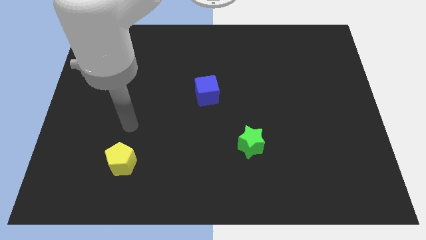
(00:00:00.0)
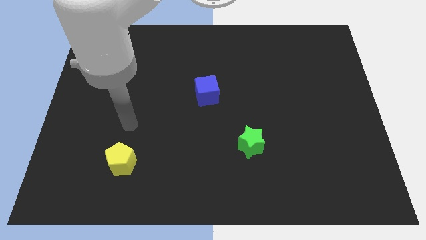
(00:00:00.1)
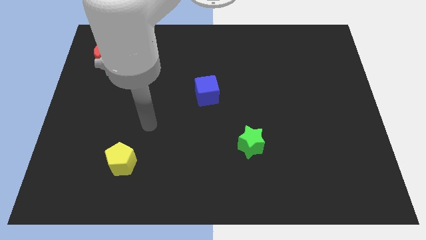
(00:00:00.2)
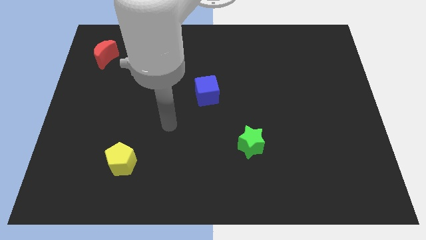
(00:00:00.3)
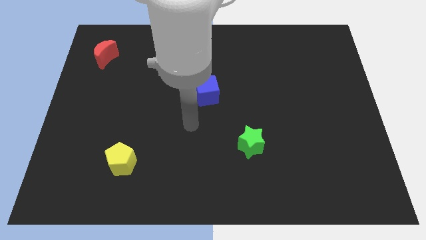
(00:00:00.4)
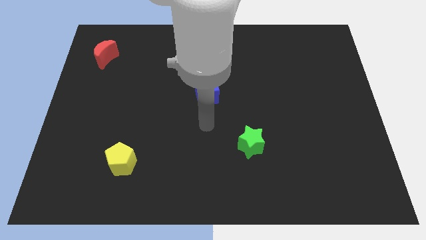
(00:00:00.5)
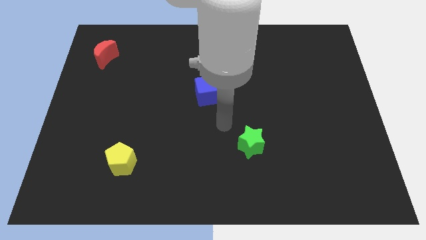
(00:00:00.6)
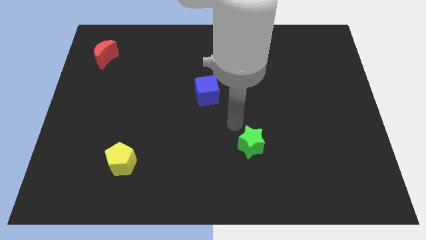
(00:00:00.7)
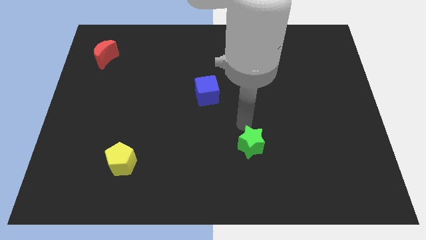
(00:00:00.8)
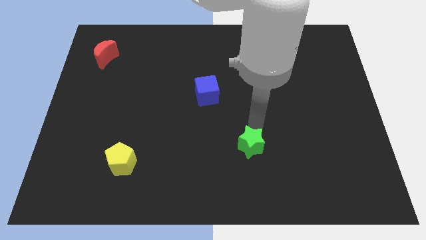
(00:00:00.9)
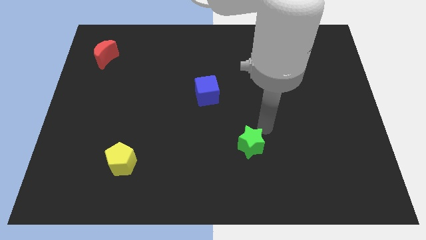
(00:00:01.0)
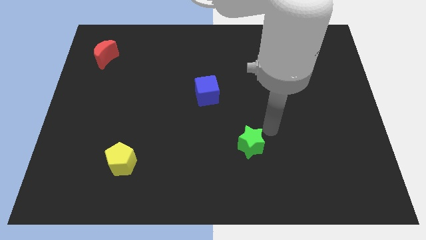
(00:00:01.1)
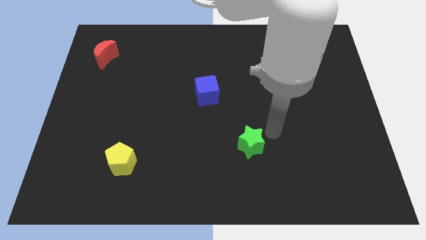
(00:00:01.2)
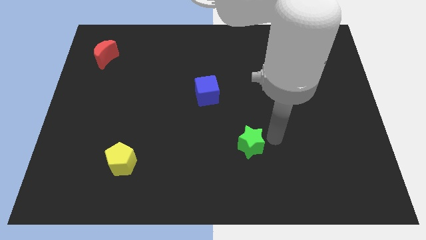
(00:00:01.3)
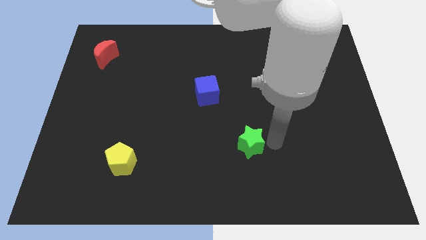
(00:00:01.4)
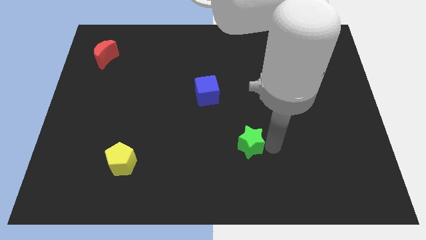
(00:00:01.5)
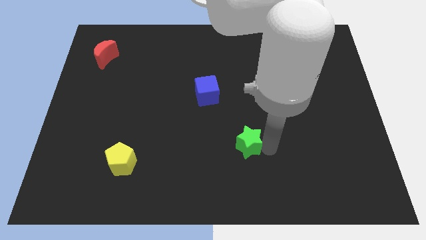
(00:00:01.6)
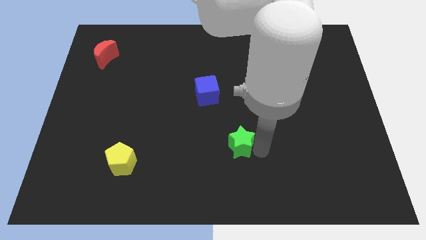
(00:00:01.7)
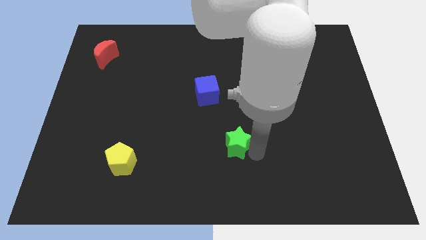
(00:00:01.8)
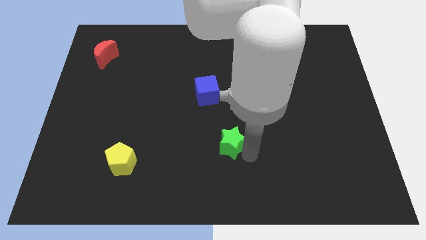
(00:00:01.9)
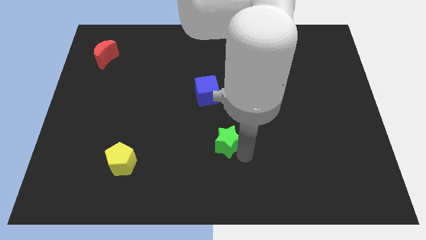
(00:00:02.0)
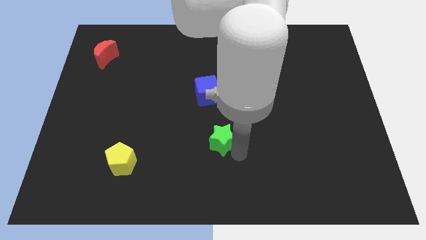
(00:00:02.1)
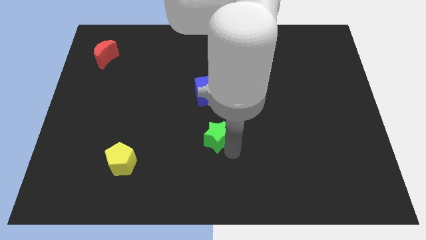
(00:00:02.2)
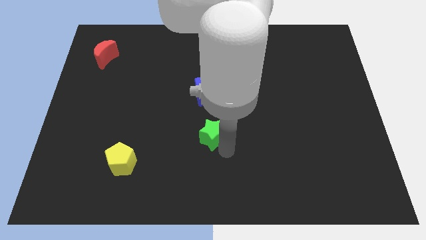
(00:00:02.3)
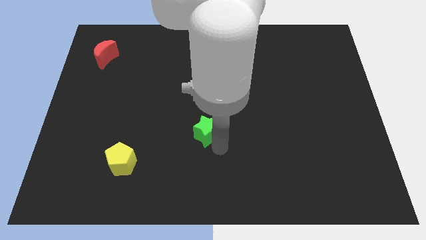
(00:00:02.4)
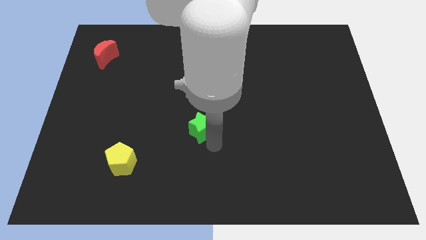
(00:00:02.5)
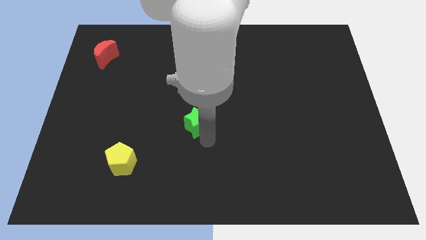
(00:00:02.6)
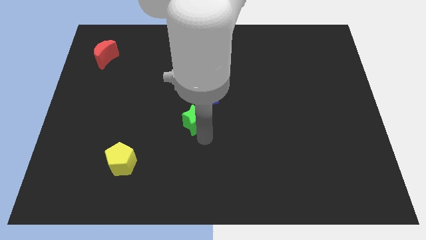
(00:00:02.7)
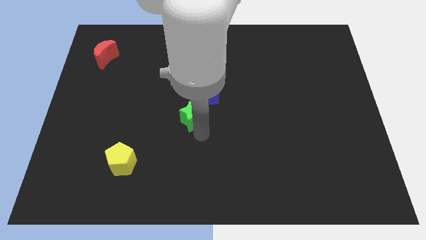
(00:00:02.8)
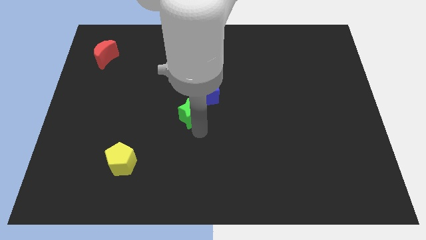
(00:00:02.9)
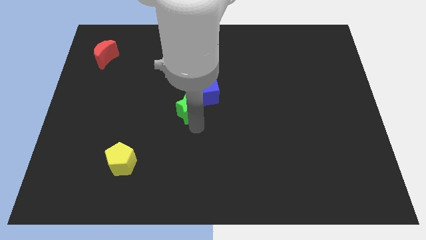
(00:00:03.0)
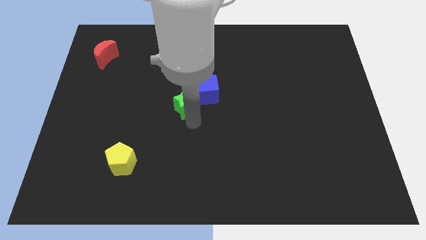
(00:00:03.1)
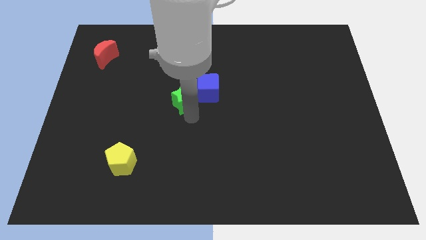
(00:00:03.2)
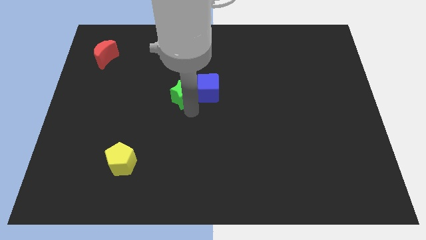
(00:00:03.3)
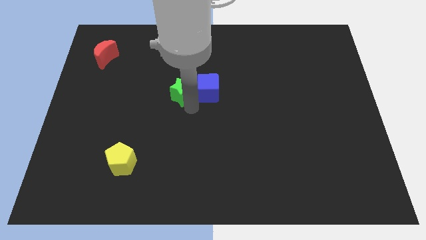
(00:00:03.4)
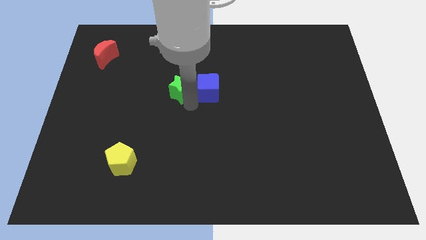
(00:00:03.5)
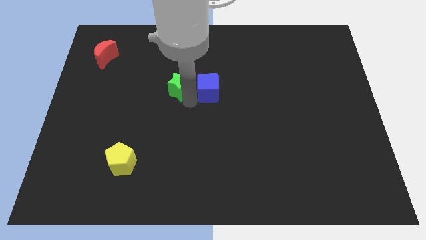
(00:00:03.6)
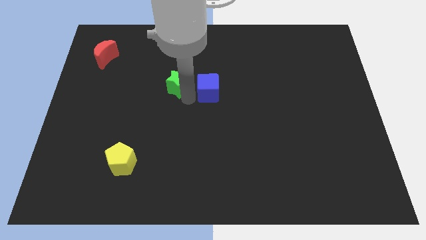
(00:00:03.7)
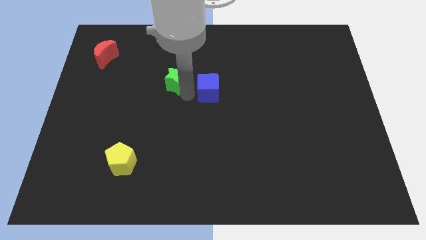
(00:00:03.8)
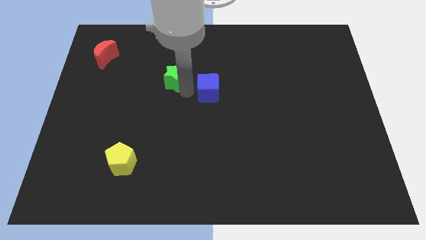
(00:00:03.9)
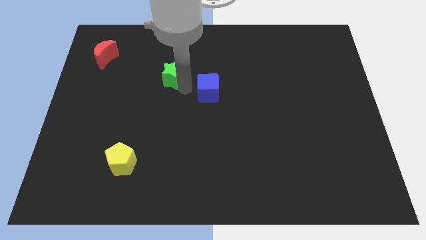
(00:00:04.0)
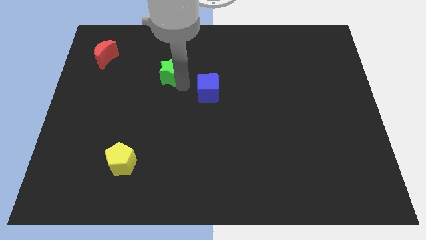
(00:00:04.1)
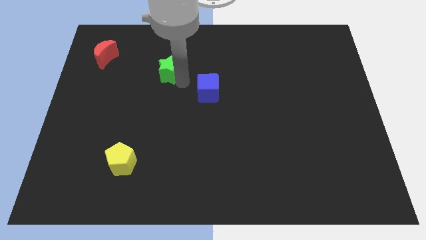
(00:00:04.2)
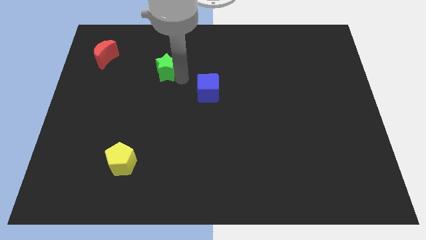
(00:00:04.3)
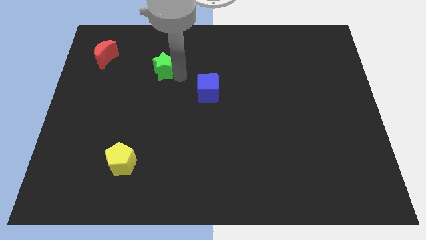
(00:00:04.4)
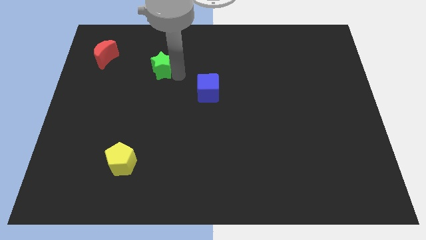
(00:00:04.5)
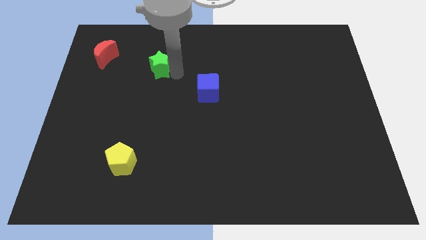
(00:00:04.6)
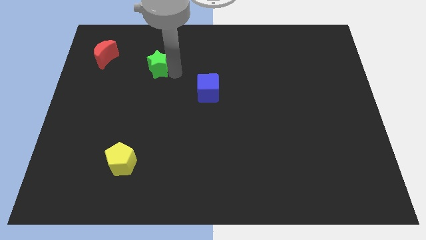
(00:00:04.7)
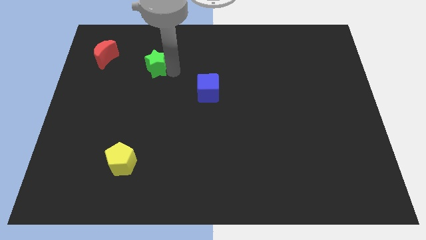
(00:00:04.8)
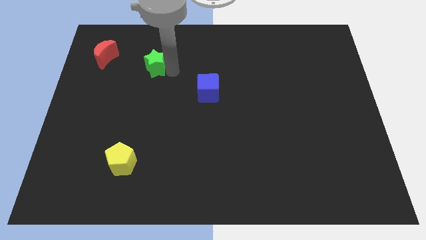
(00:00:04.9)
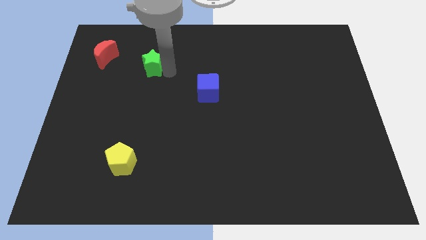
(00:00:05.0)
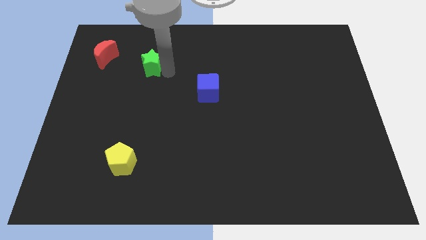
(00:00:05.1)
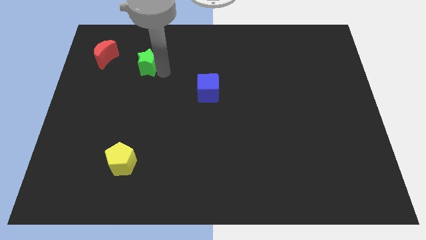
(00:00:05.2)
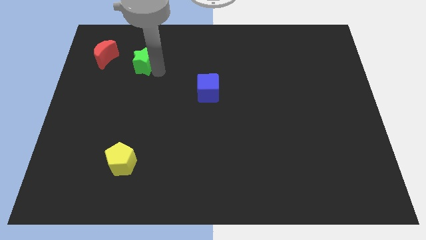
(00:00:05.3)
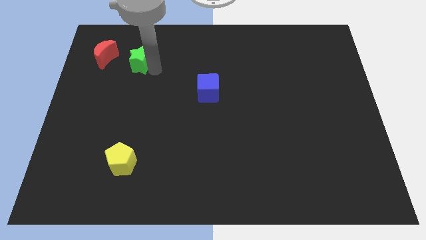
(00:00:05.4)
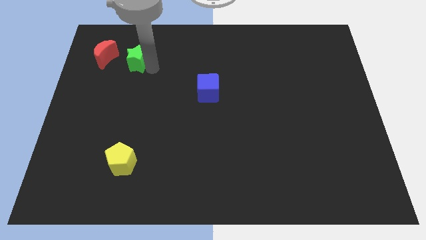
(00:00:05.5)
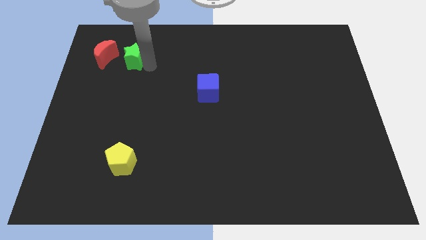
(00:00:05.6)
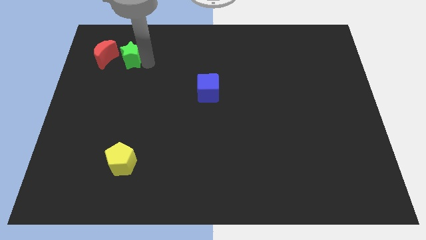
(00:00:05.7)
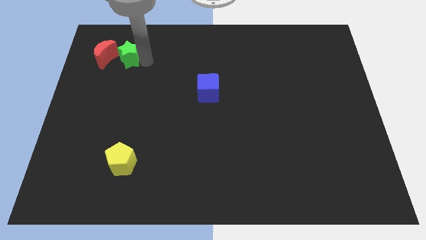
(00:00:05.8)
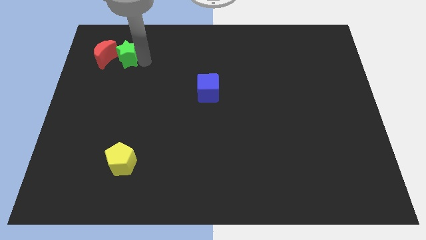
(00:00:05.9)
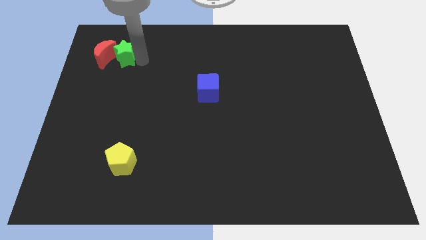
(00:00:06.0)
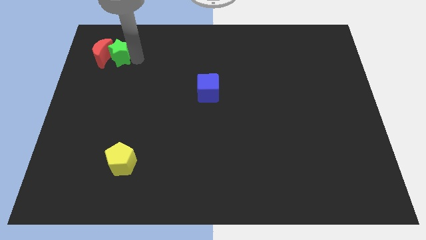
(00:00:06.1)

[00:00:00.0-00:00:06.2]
push the star next to the moon

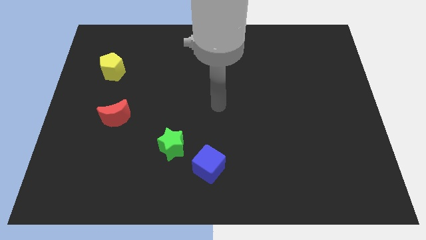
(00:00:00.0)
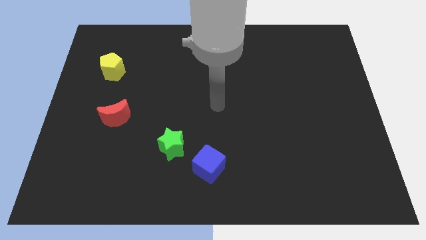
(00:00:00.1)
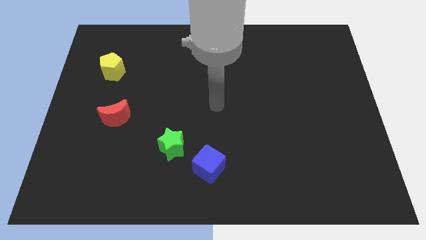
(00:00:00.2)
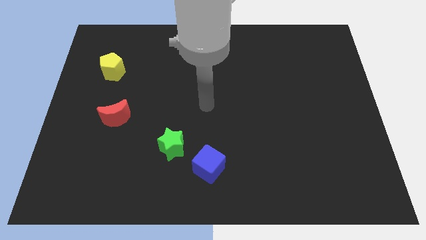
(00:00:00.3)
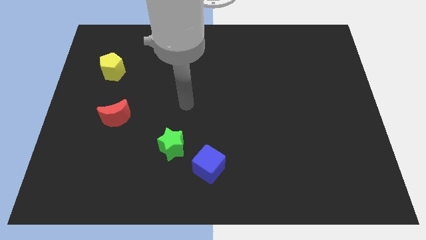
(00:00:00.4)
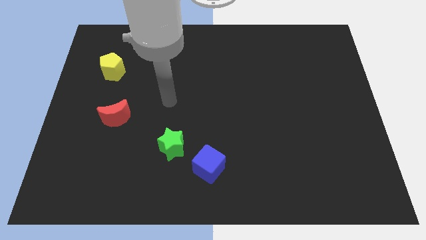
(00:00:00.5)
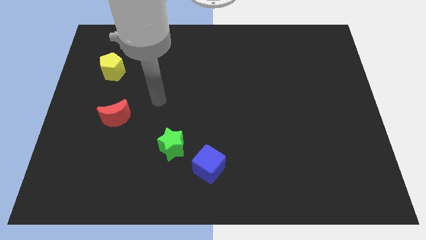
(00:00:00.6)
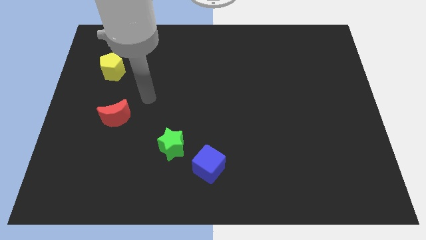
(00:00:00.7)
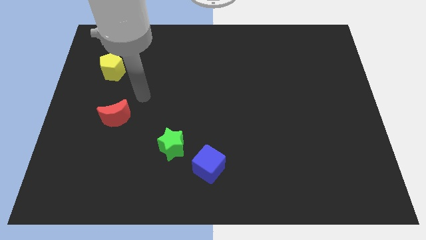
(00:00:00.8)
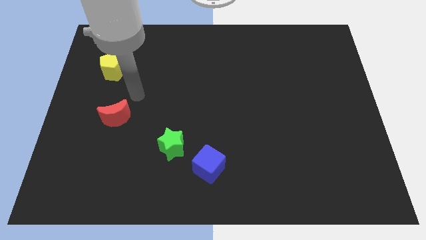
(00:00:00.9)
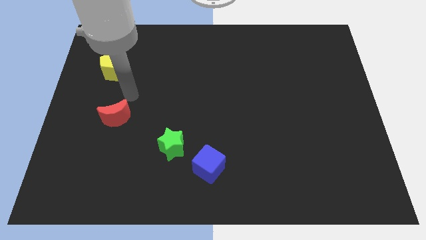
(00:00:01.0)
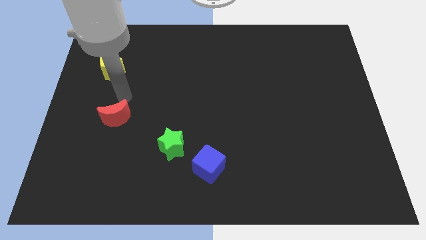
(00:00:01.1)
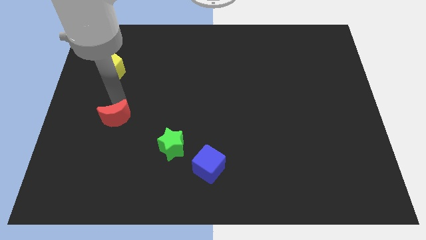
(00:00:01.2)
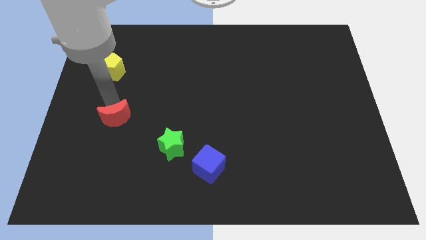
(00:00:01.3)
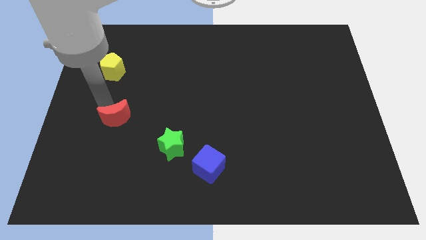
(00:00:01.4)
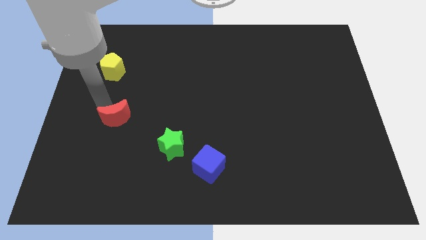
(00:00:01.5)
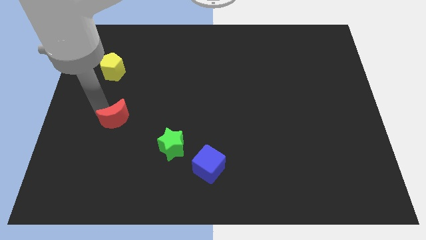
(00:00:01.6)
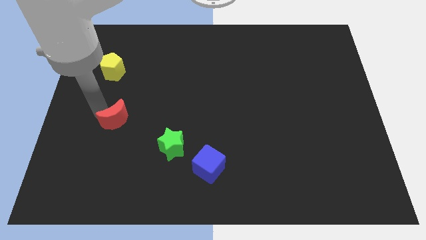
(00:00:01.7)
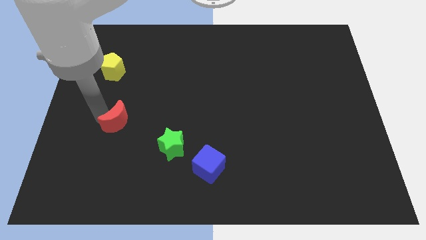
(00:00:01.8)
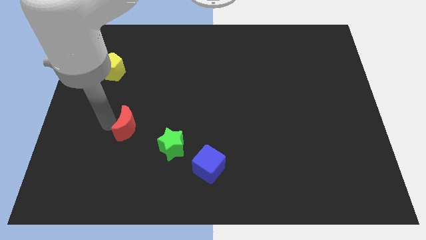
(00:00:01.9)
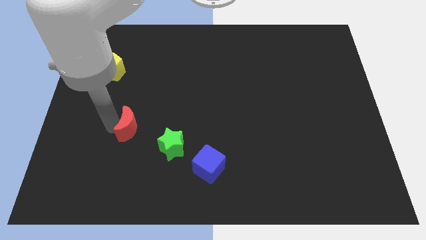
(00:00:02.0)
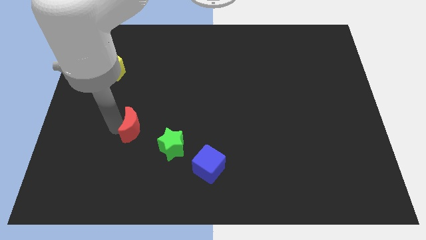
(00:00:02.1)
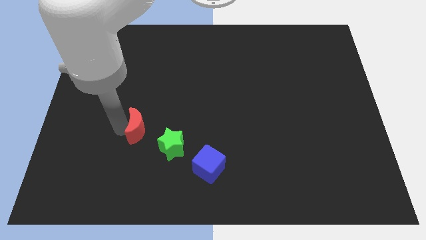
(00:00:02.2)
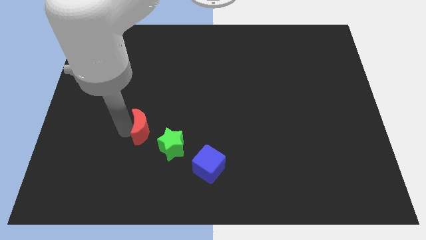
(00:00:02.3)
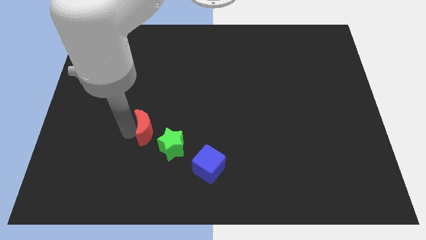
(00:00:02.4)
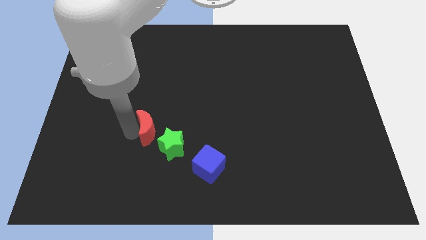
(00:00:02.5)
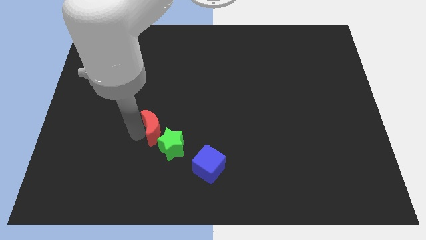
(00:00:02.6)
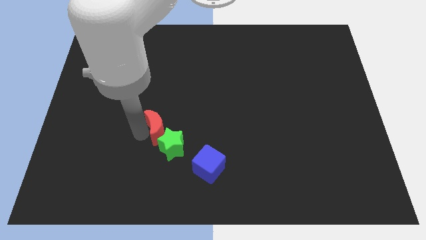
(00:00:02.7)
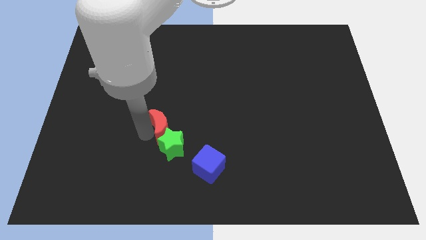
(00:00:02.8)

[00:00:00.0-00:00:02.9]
move the moon next to the star
